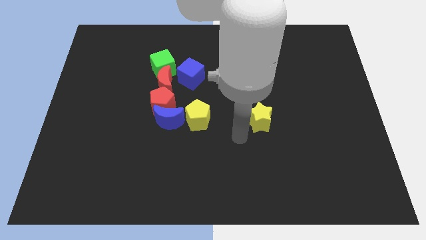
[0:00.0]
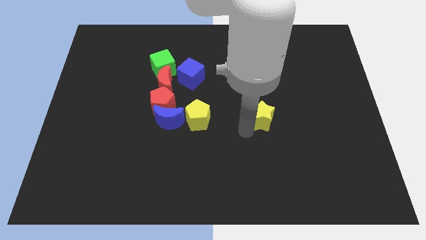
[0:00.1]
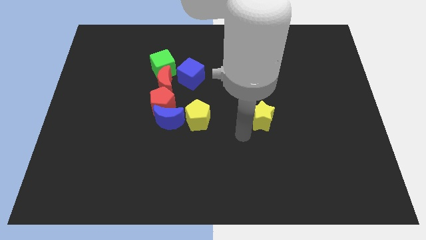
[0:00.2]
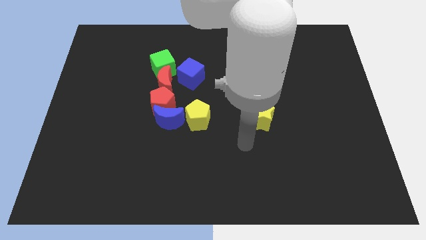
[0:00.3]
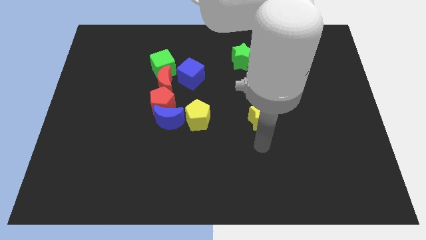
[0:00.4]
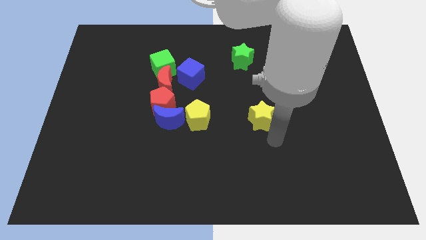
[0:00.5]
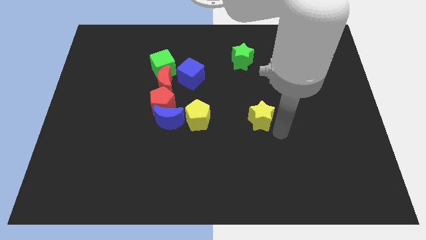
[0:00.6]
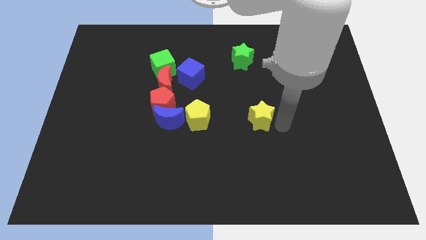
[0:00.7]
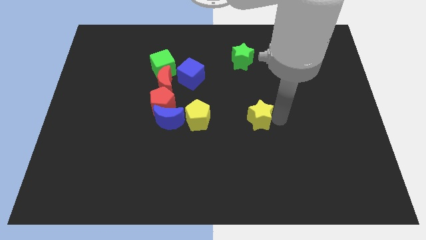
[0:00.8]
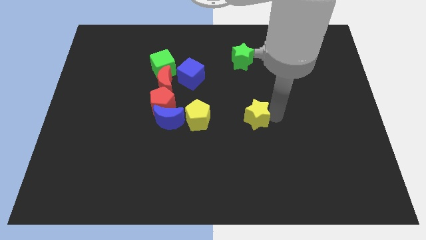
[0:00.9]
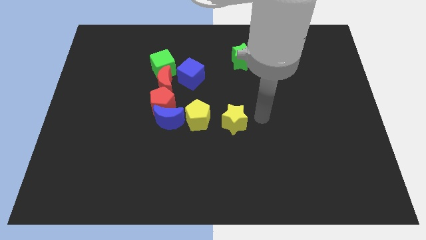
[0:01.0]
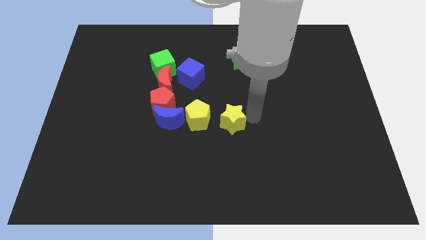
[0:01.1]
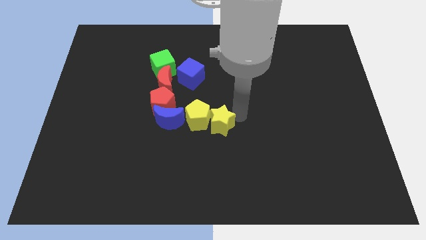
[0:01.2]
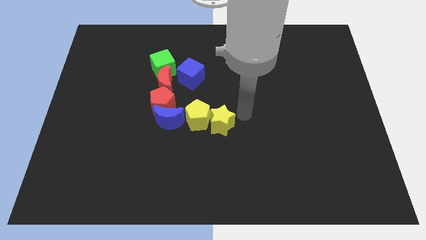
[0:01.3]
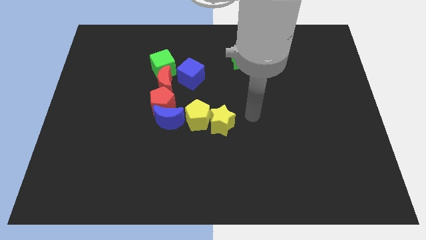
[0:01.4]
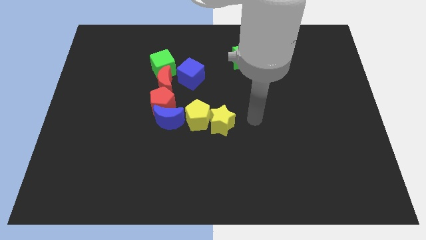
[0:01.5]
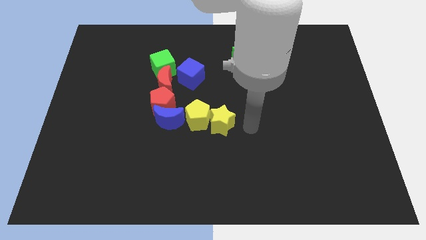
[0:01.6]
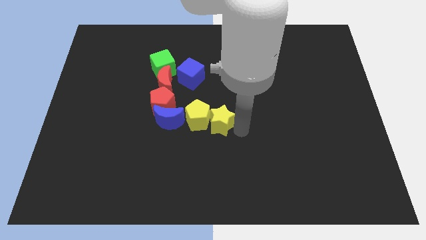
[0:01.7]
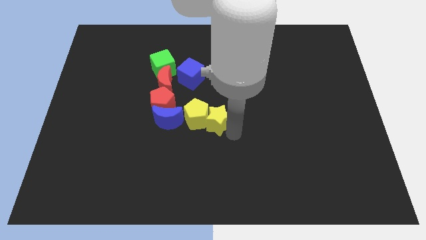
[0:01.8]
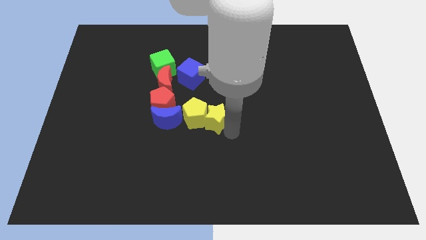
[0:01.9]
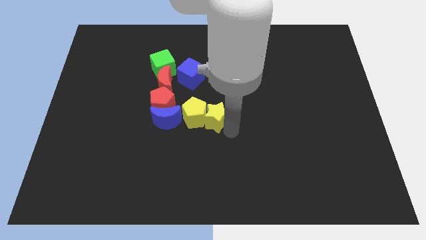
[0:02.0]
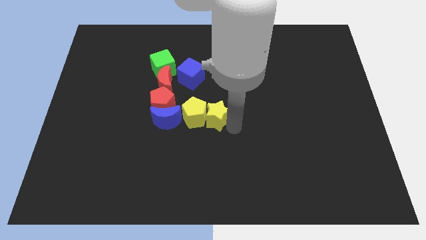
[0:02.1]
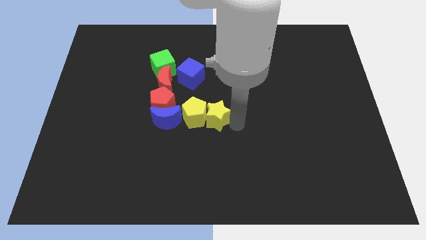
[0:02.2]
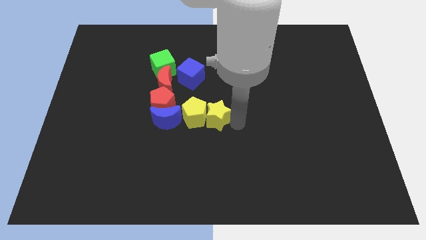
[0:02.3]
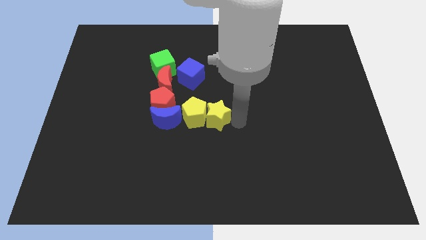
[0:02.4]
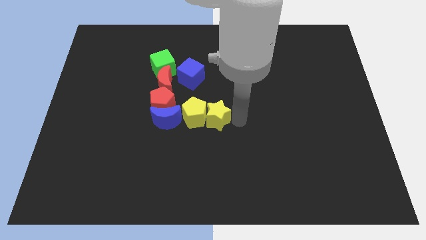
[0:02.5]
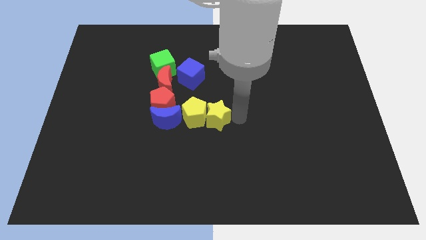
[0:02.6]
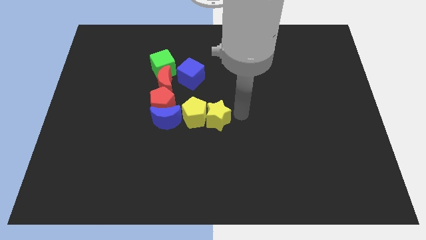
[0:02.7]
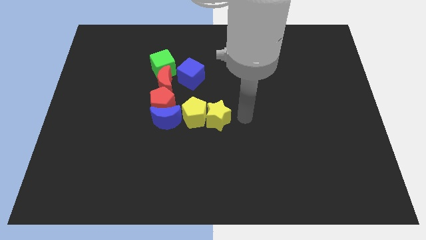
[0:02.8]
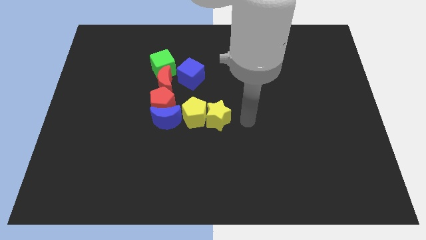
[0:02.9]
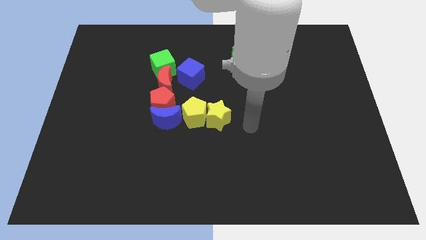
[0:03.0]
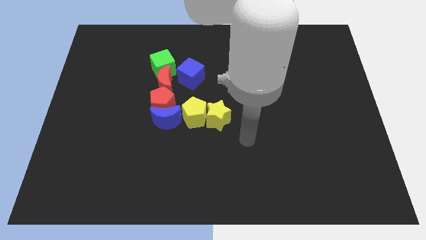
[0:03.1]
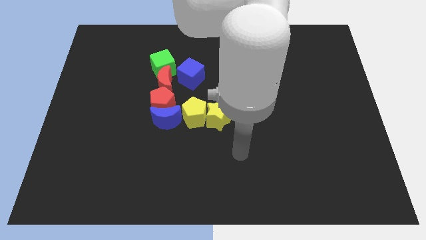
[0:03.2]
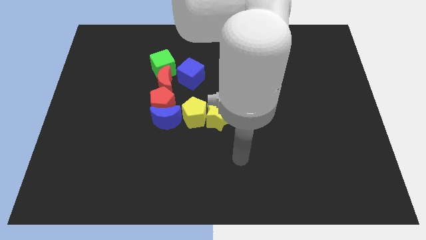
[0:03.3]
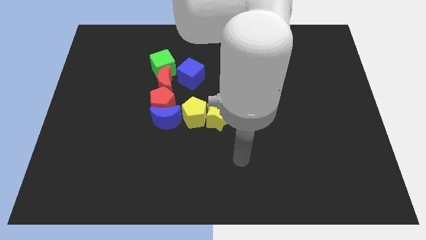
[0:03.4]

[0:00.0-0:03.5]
move the yellow star right to the yellow pentagon

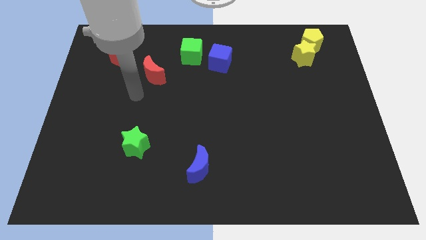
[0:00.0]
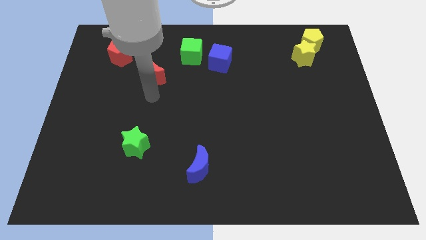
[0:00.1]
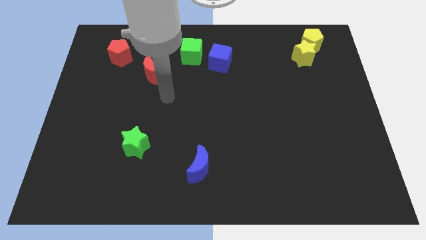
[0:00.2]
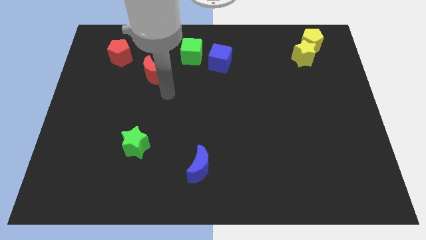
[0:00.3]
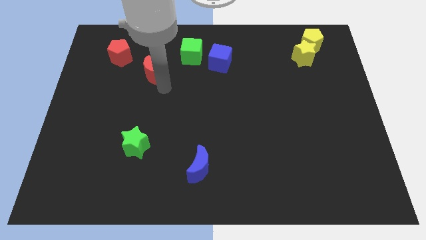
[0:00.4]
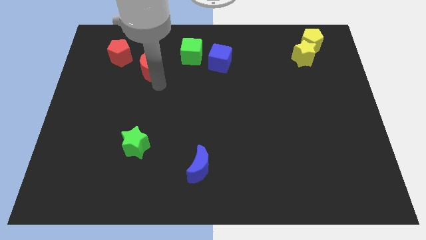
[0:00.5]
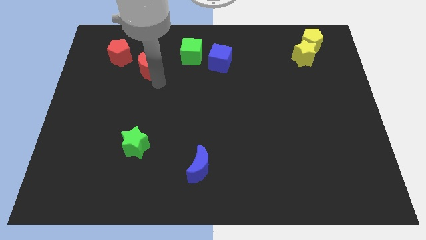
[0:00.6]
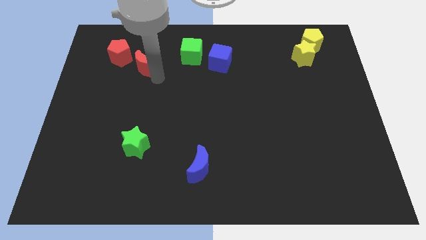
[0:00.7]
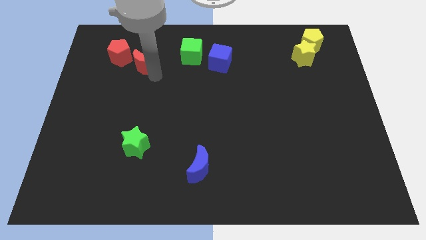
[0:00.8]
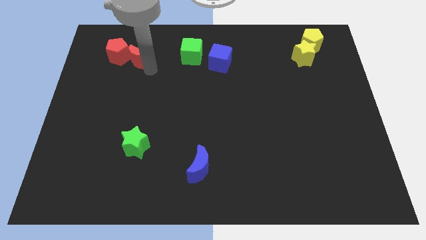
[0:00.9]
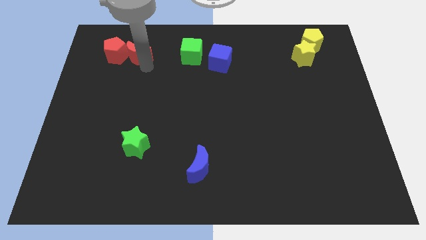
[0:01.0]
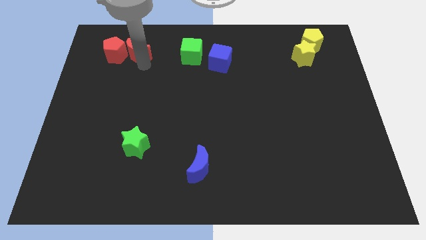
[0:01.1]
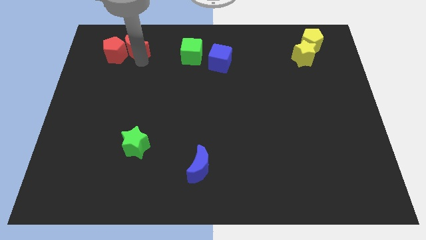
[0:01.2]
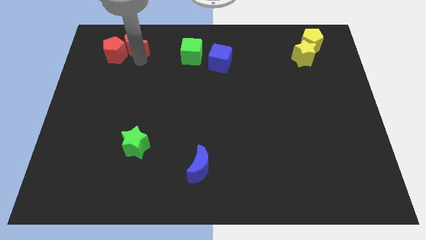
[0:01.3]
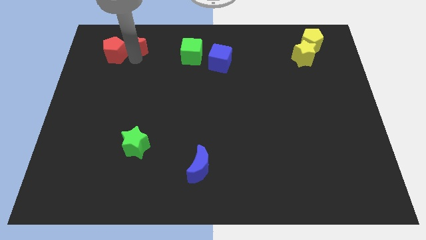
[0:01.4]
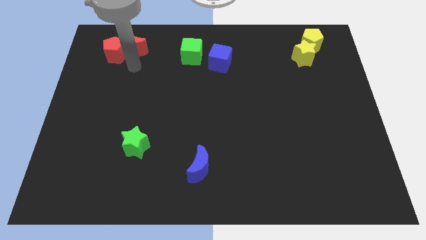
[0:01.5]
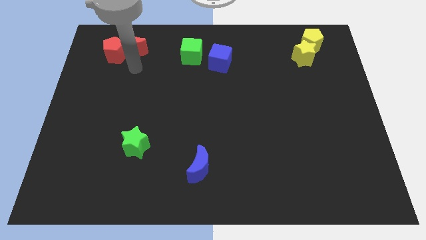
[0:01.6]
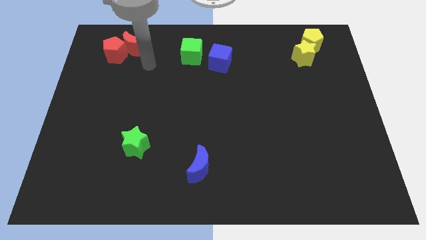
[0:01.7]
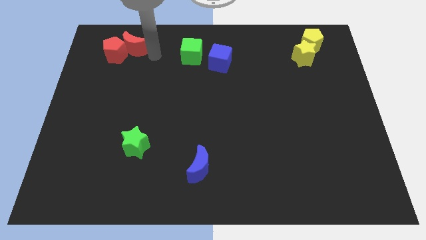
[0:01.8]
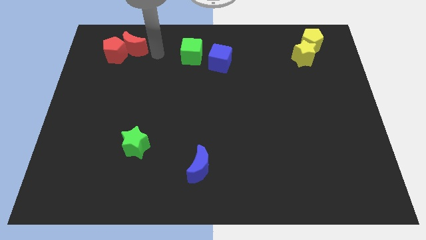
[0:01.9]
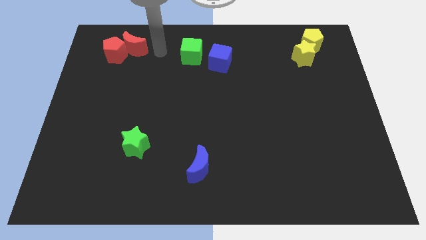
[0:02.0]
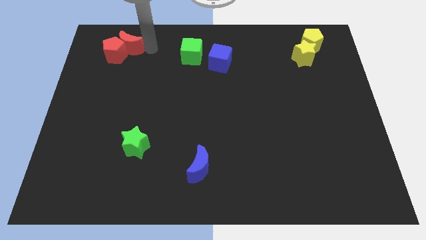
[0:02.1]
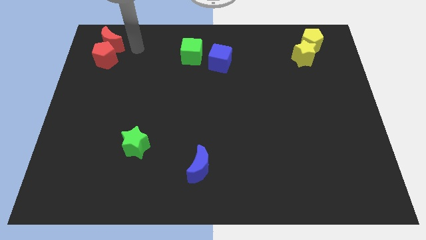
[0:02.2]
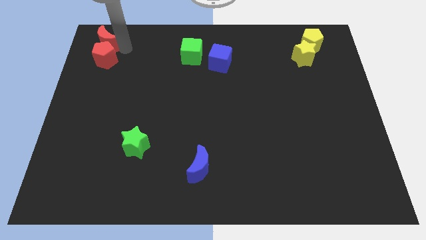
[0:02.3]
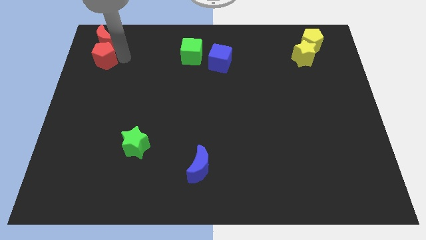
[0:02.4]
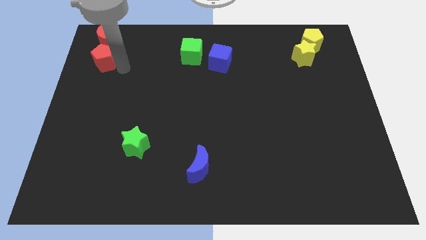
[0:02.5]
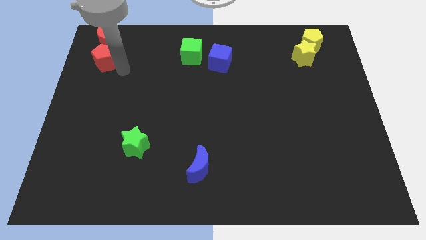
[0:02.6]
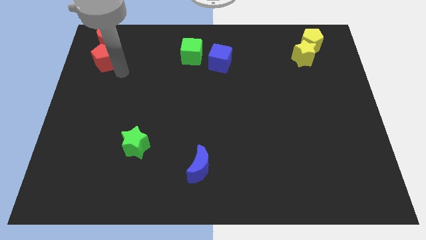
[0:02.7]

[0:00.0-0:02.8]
place the red crescent above red pentagon

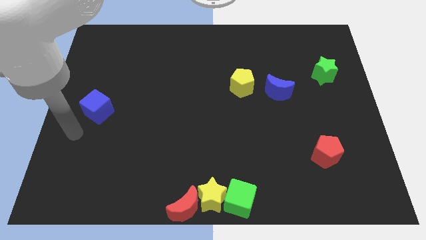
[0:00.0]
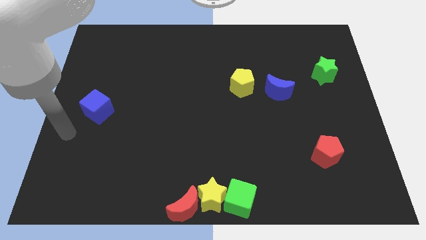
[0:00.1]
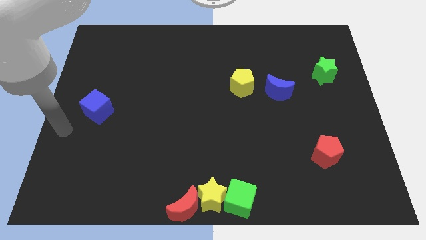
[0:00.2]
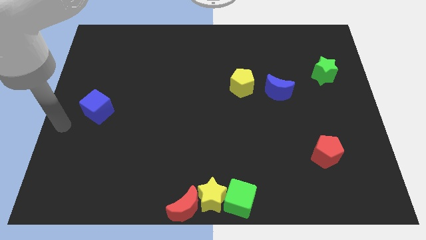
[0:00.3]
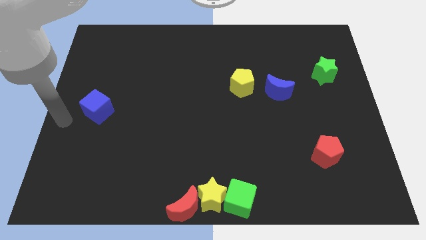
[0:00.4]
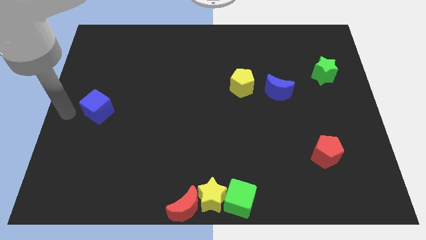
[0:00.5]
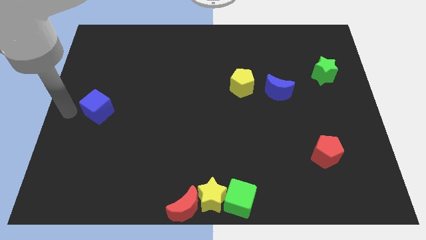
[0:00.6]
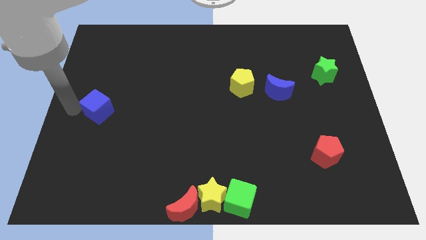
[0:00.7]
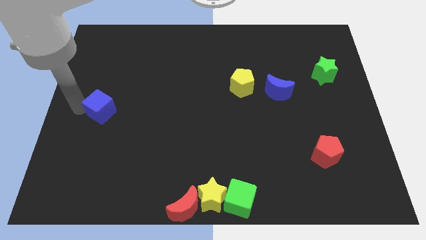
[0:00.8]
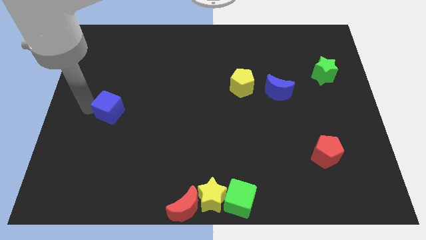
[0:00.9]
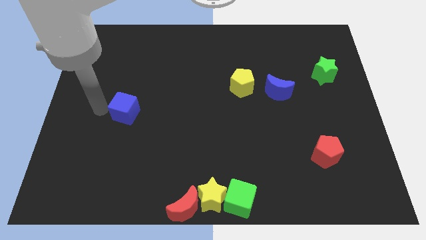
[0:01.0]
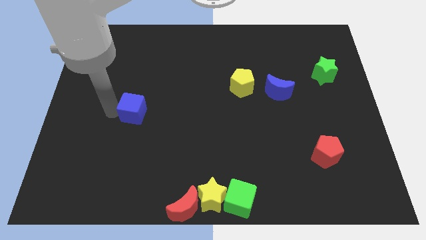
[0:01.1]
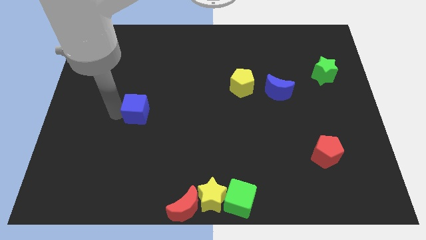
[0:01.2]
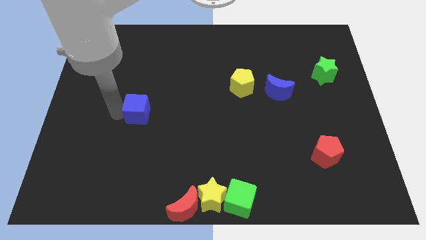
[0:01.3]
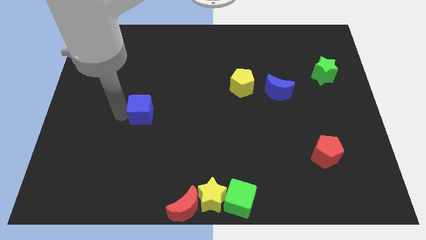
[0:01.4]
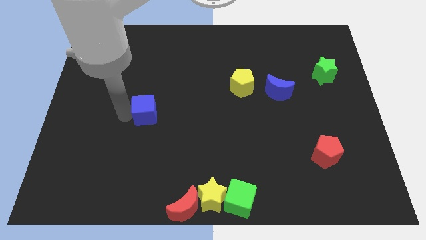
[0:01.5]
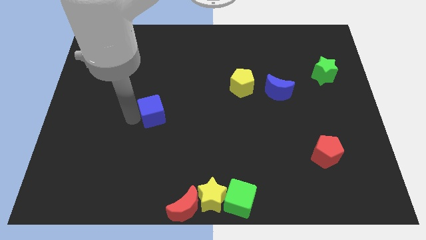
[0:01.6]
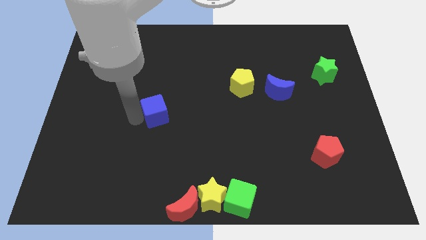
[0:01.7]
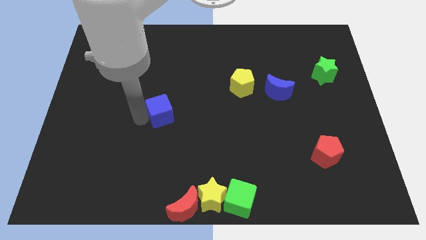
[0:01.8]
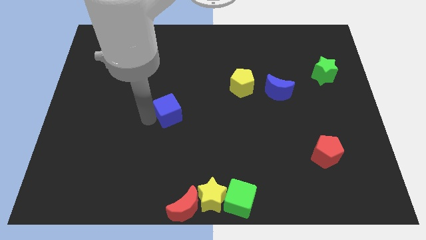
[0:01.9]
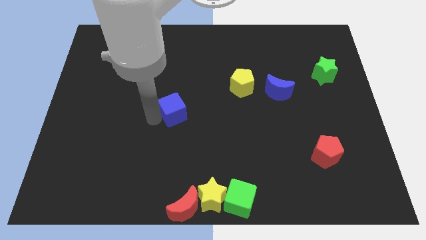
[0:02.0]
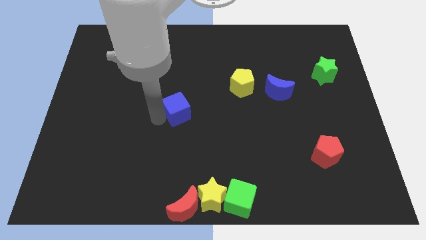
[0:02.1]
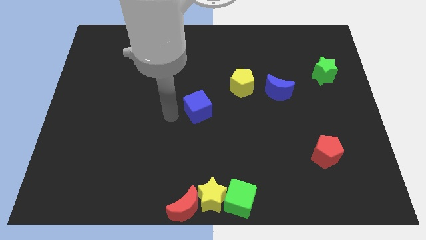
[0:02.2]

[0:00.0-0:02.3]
move the blue cube vertically above the red moon

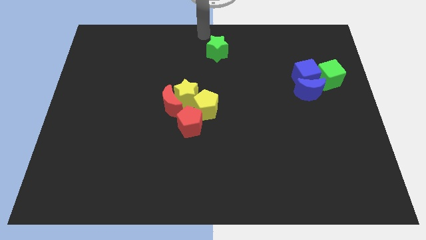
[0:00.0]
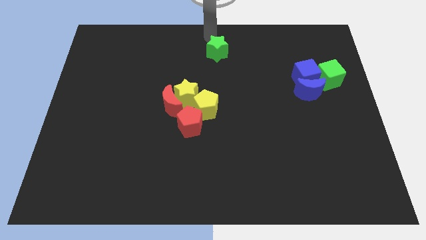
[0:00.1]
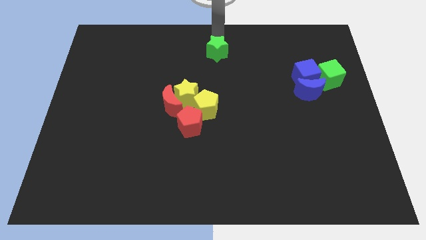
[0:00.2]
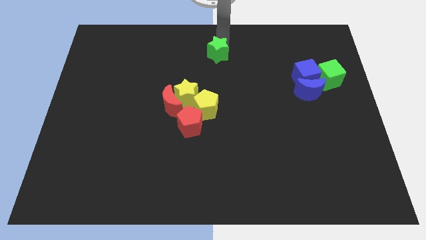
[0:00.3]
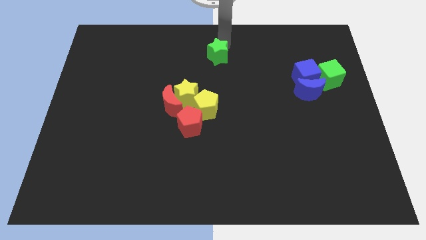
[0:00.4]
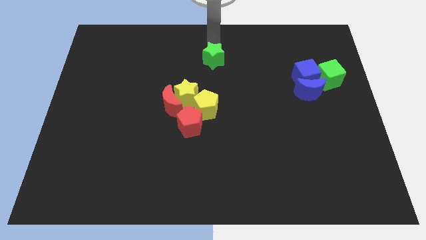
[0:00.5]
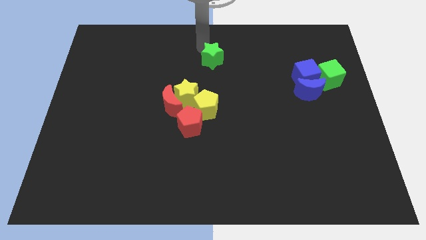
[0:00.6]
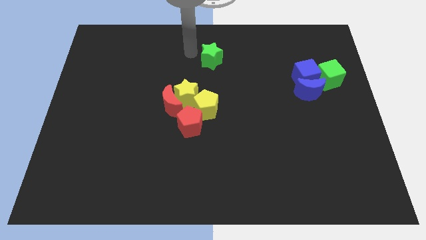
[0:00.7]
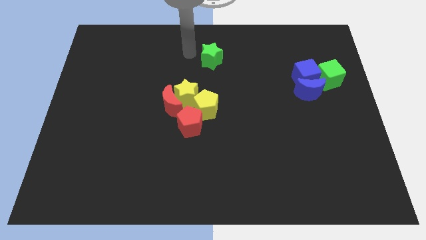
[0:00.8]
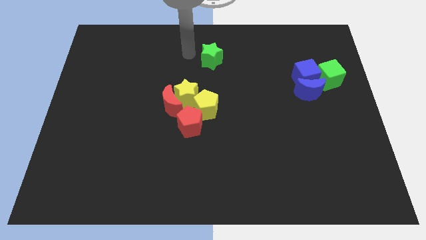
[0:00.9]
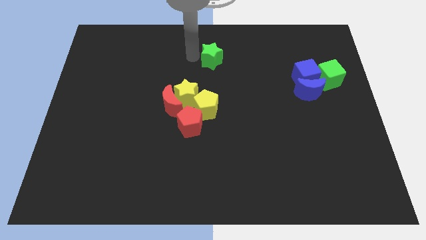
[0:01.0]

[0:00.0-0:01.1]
push the green star slightly downward
